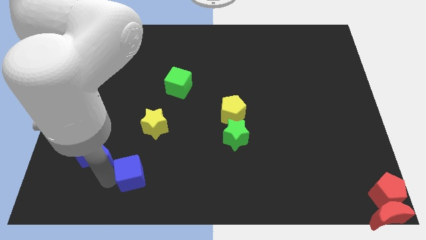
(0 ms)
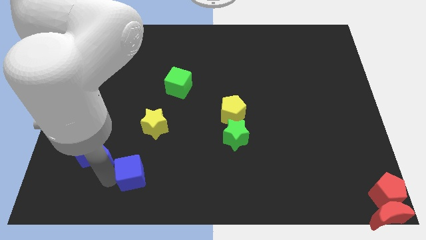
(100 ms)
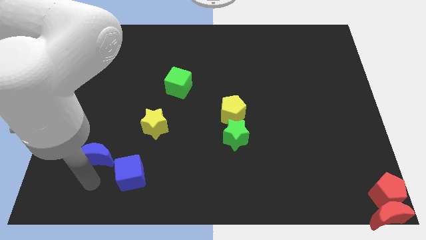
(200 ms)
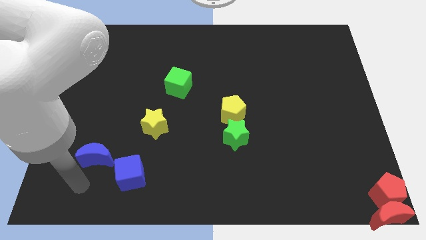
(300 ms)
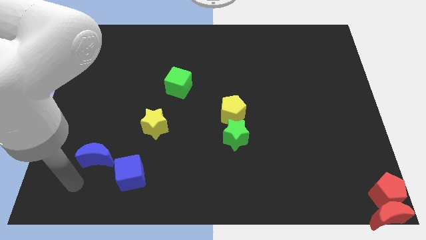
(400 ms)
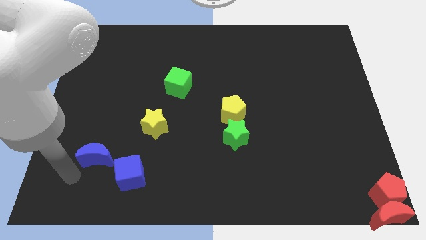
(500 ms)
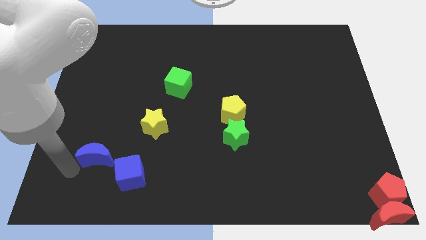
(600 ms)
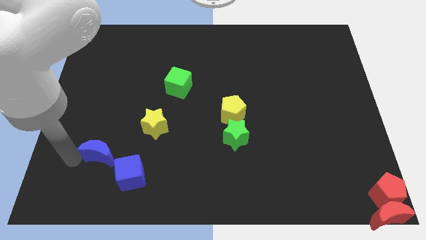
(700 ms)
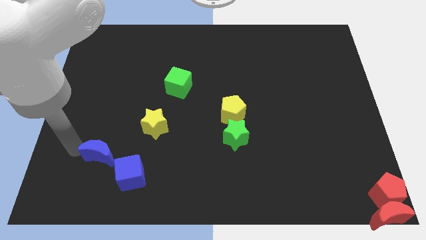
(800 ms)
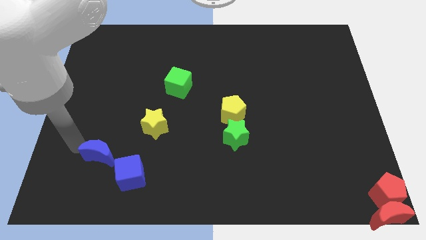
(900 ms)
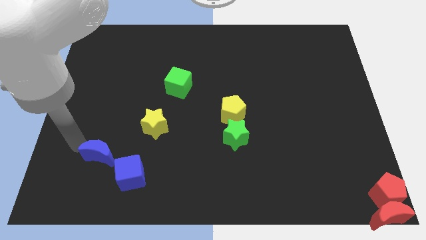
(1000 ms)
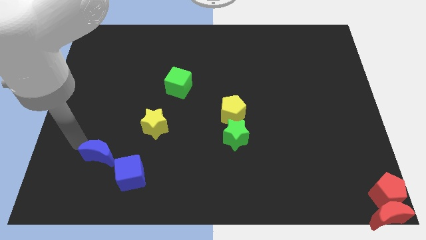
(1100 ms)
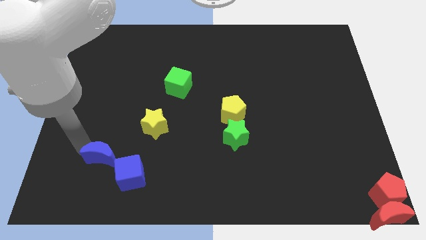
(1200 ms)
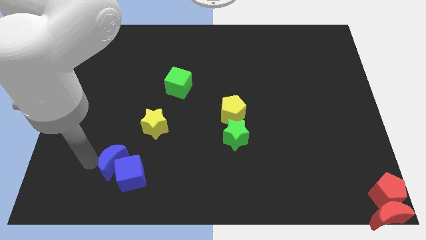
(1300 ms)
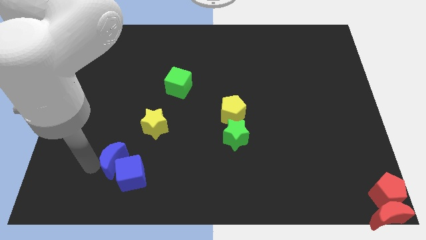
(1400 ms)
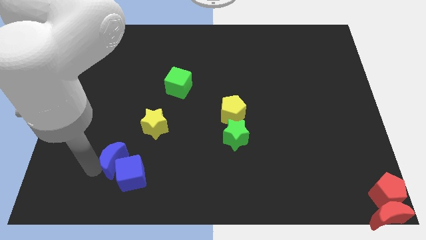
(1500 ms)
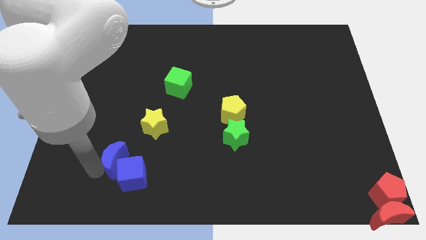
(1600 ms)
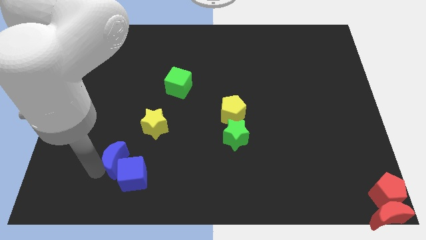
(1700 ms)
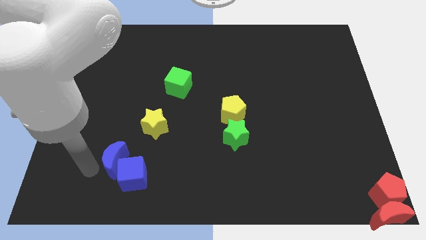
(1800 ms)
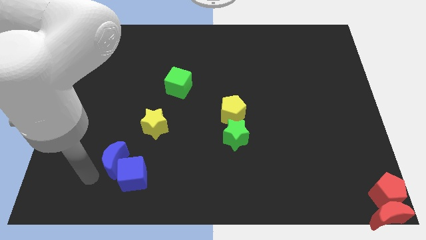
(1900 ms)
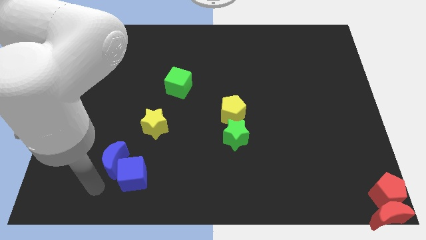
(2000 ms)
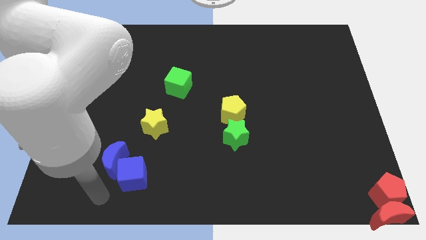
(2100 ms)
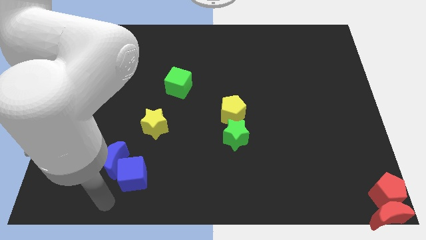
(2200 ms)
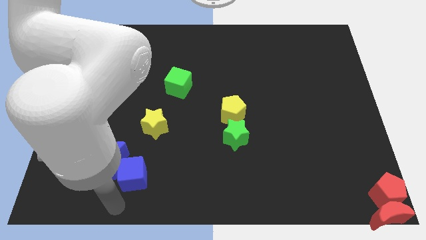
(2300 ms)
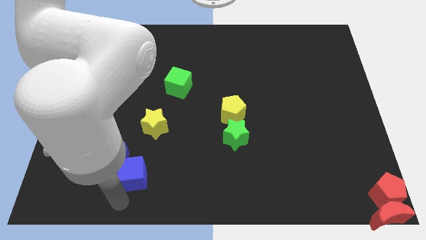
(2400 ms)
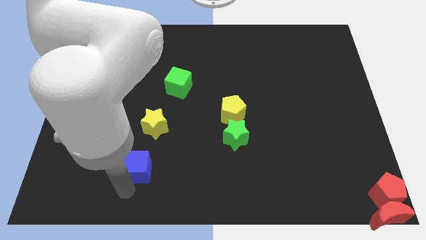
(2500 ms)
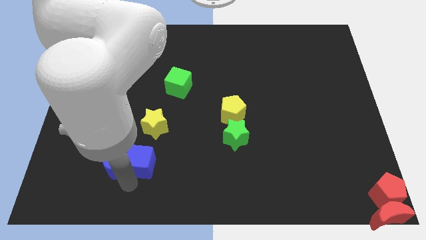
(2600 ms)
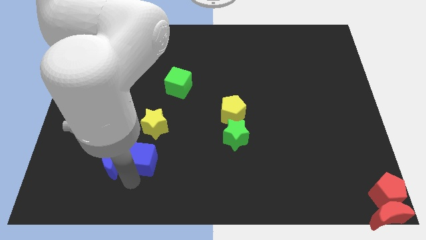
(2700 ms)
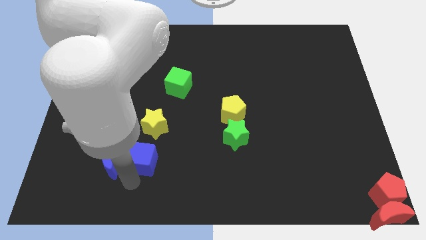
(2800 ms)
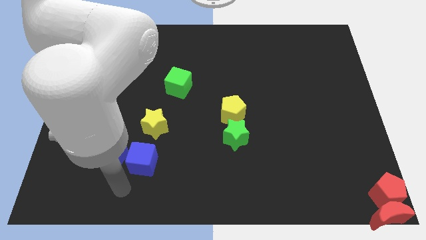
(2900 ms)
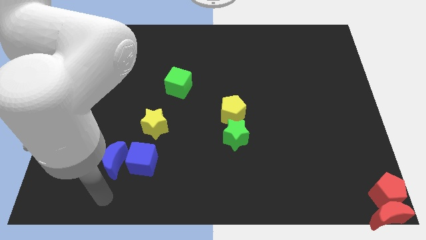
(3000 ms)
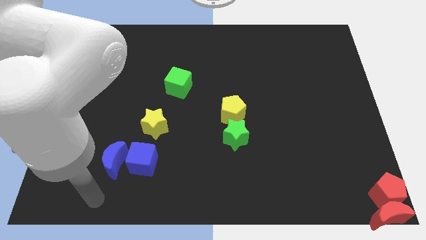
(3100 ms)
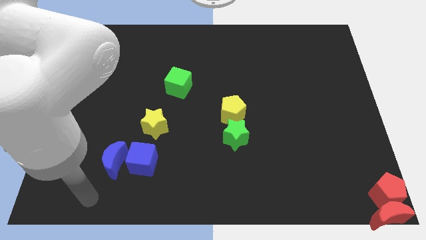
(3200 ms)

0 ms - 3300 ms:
move the blue cube to the bottom of yellow pentagon

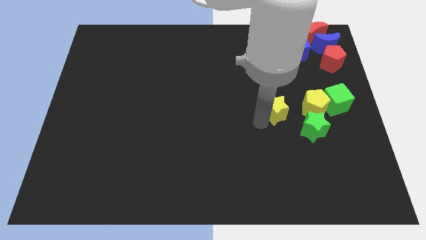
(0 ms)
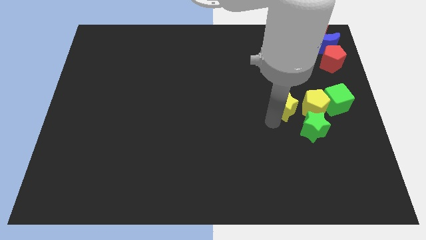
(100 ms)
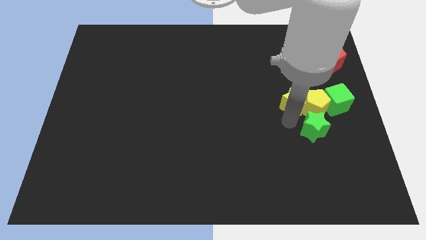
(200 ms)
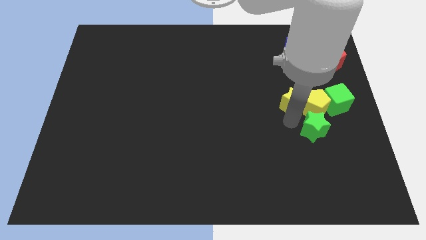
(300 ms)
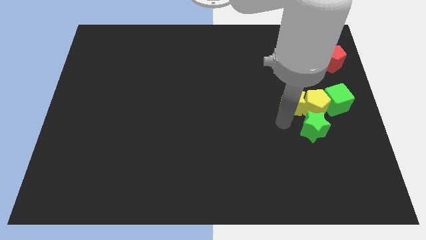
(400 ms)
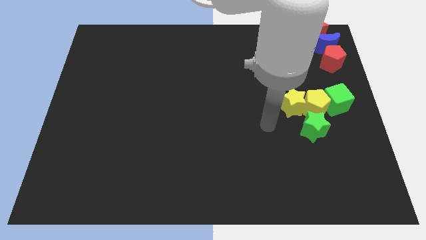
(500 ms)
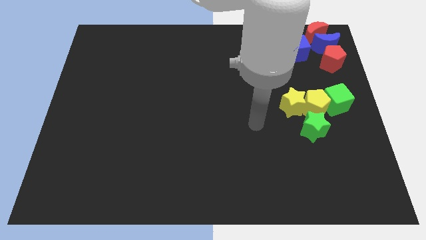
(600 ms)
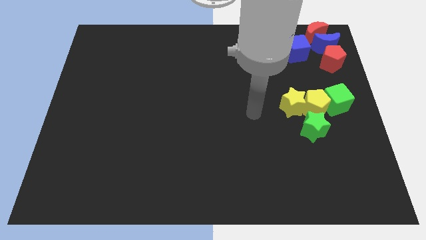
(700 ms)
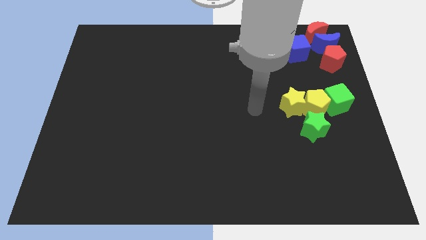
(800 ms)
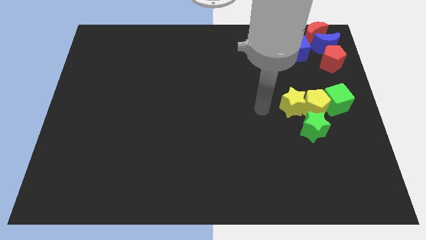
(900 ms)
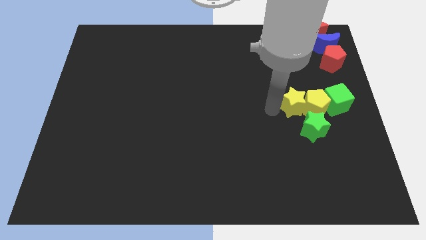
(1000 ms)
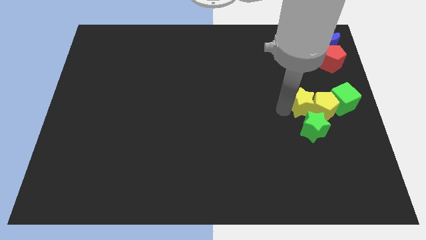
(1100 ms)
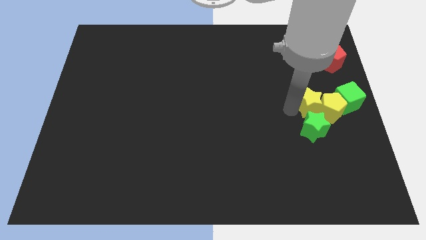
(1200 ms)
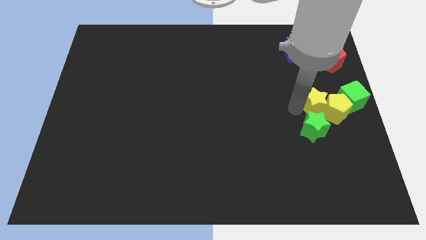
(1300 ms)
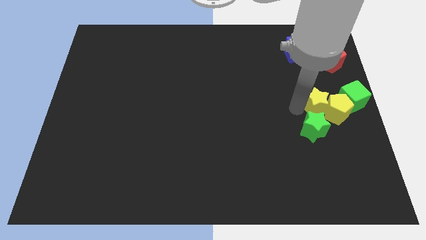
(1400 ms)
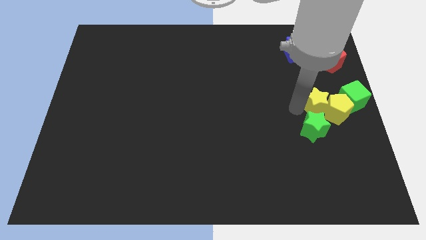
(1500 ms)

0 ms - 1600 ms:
push the yellow star into the yellow pentagon

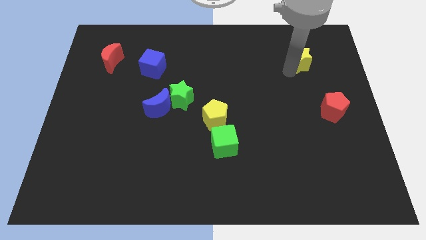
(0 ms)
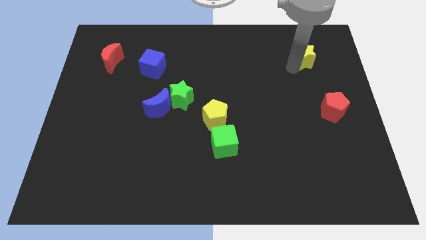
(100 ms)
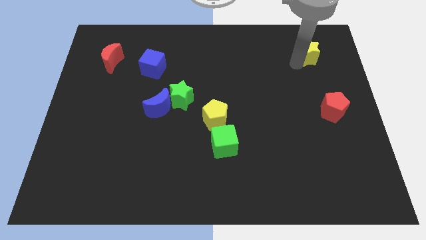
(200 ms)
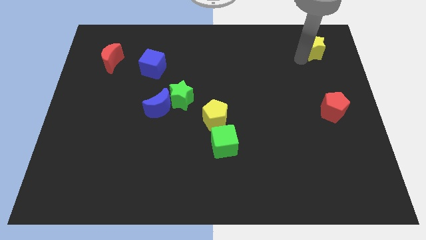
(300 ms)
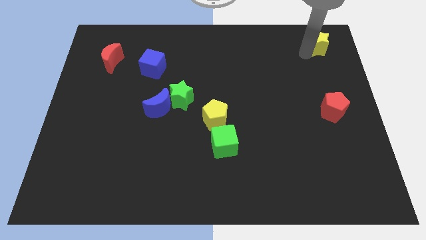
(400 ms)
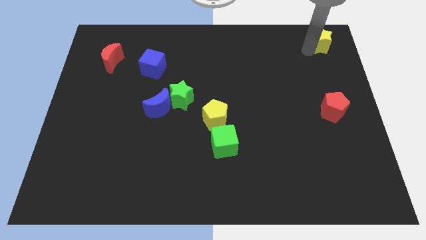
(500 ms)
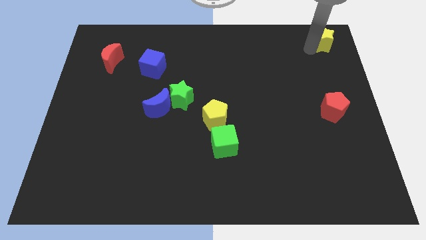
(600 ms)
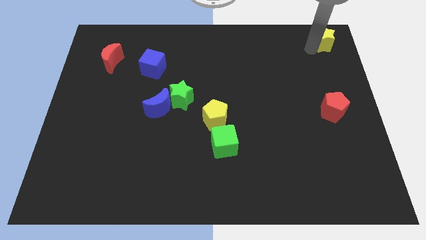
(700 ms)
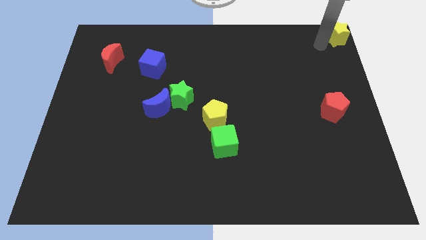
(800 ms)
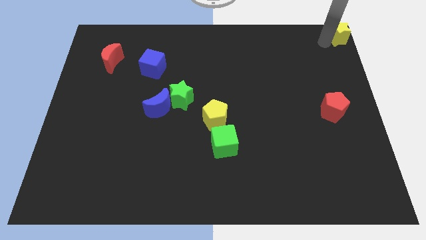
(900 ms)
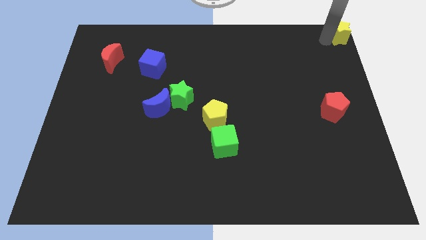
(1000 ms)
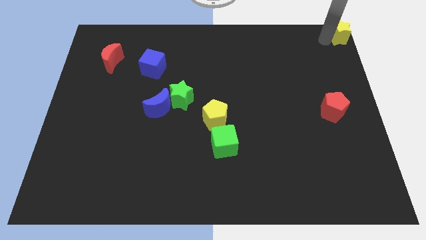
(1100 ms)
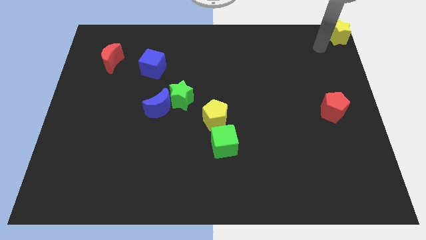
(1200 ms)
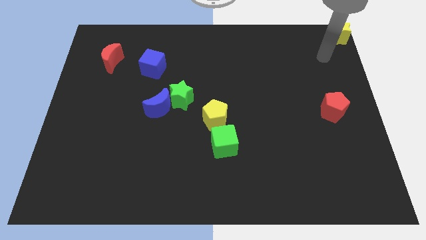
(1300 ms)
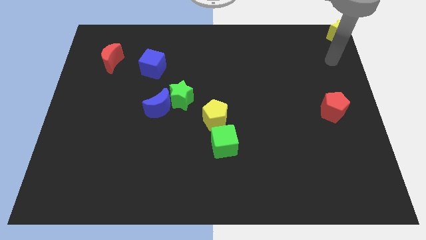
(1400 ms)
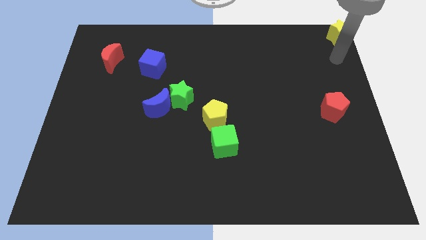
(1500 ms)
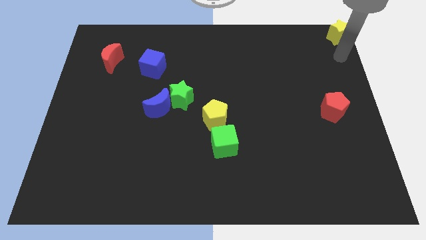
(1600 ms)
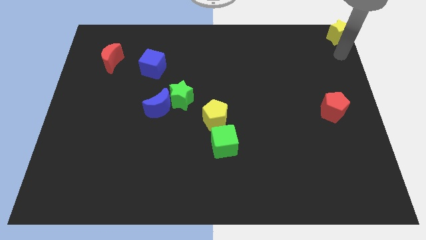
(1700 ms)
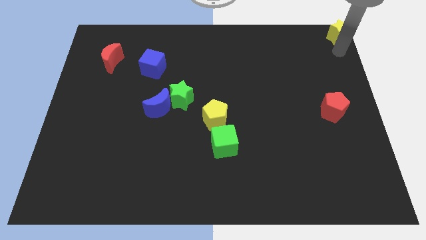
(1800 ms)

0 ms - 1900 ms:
move the yellow star to the top right corner of the board

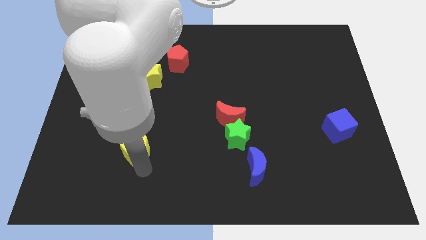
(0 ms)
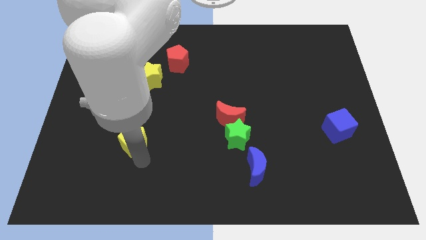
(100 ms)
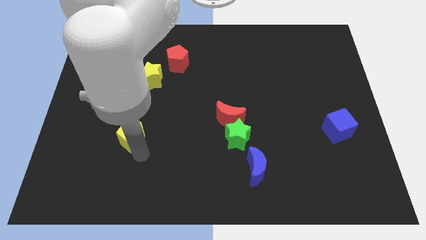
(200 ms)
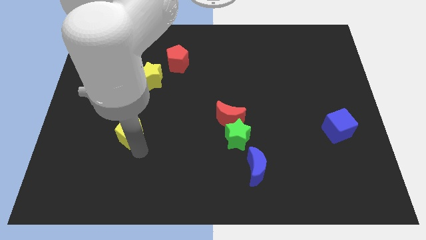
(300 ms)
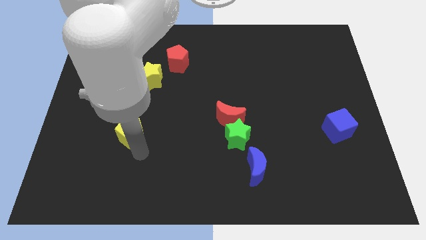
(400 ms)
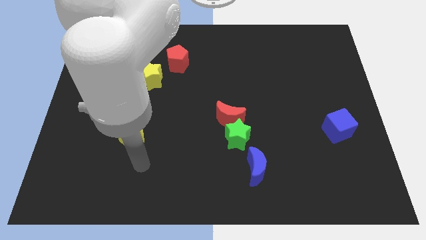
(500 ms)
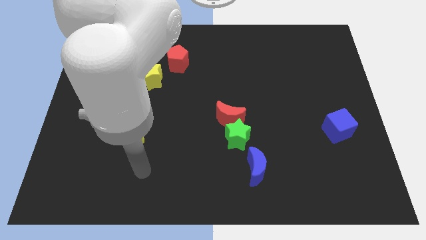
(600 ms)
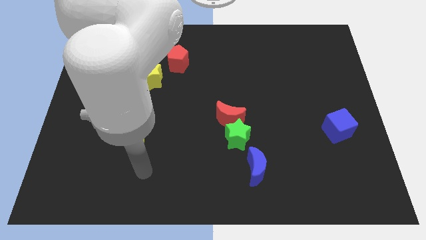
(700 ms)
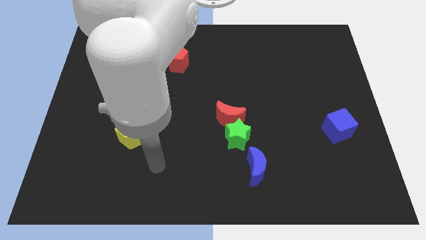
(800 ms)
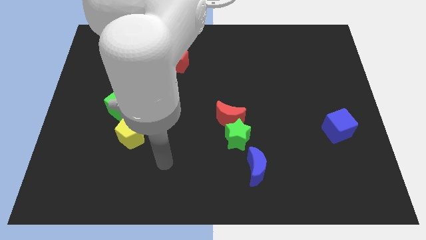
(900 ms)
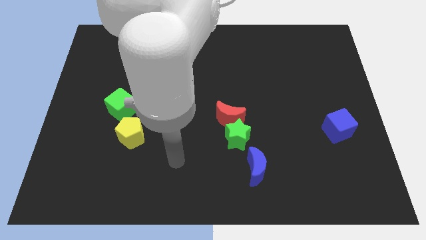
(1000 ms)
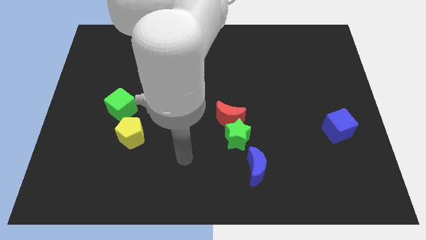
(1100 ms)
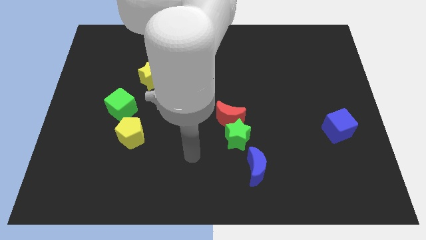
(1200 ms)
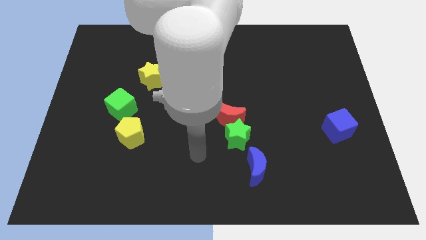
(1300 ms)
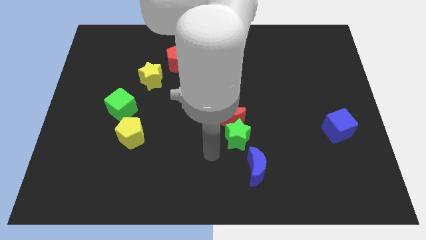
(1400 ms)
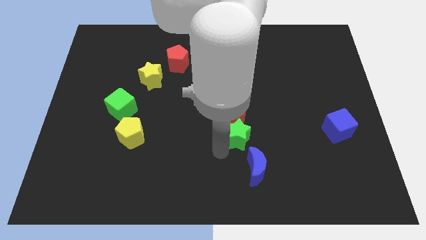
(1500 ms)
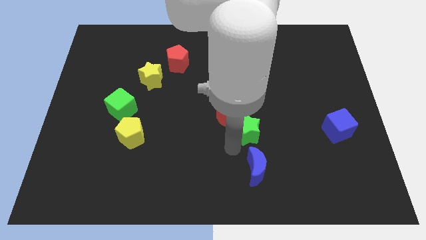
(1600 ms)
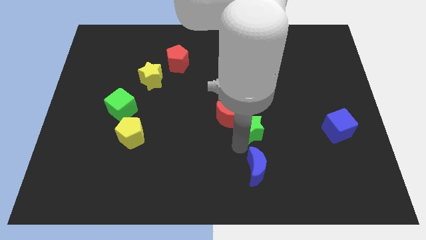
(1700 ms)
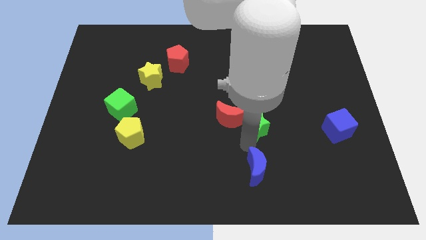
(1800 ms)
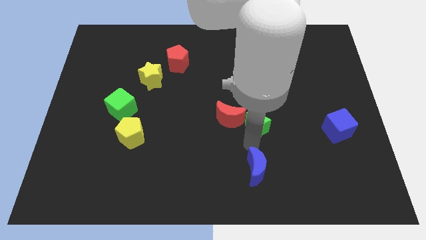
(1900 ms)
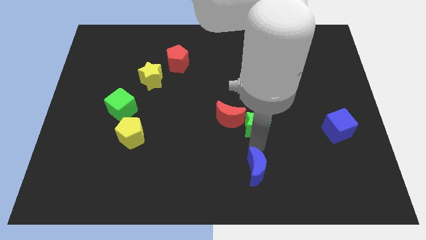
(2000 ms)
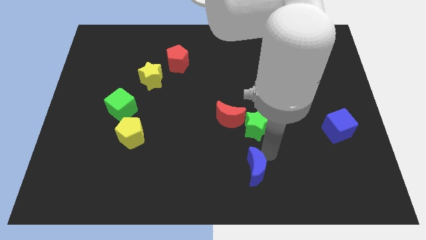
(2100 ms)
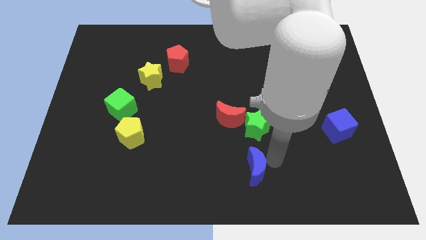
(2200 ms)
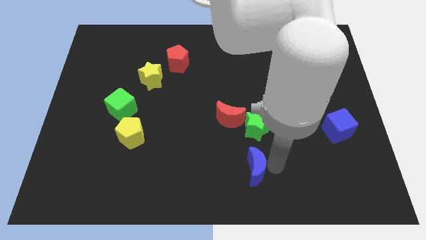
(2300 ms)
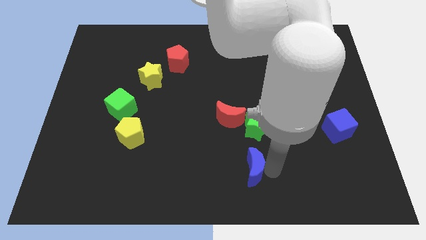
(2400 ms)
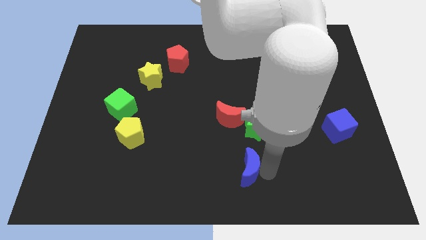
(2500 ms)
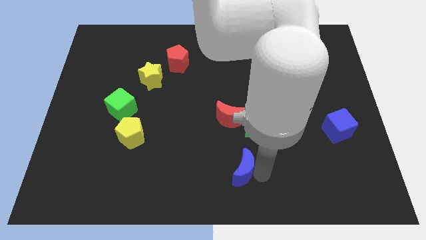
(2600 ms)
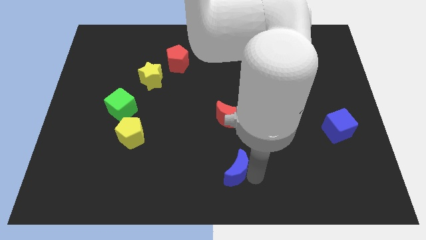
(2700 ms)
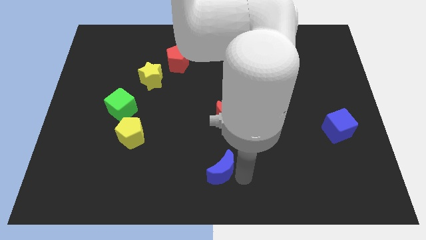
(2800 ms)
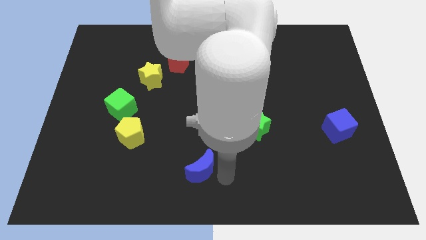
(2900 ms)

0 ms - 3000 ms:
push blue crescent below red crescent
